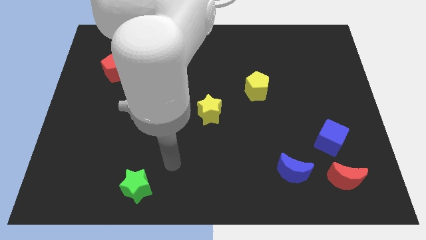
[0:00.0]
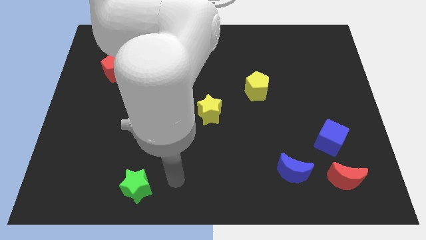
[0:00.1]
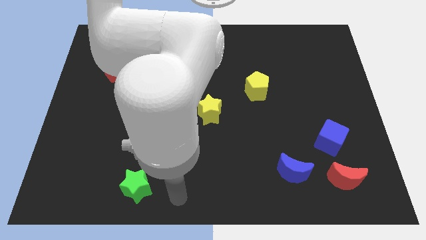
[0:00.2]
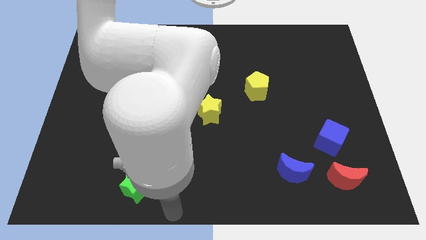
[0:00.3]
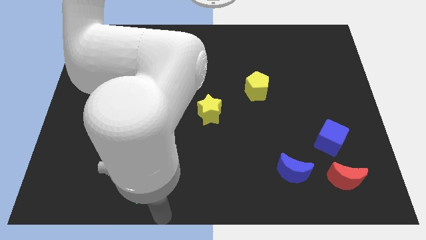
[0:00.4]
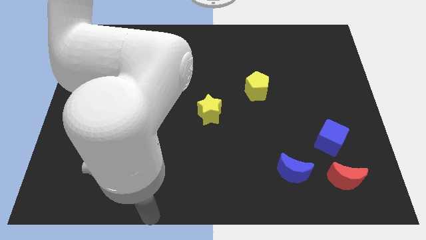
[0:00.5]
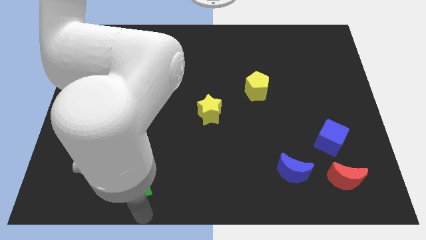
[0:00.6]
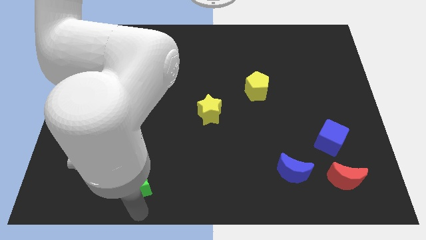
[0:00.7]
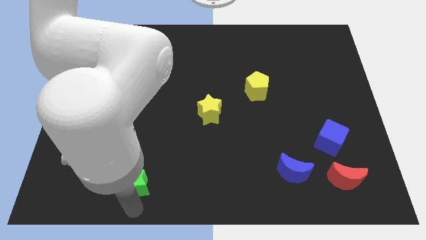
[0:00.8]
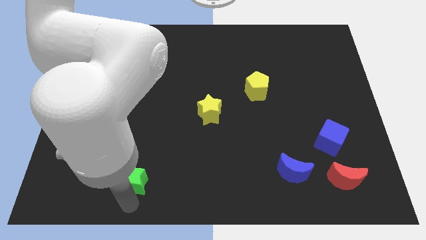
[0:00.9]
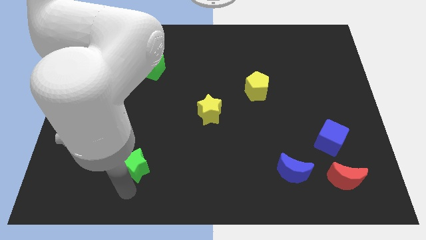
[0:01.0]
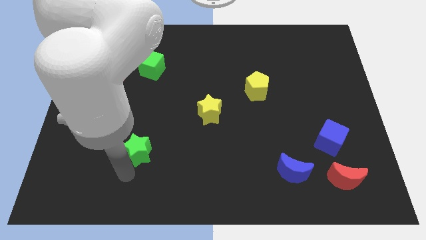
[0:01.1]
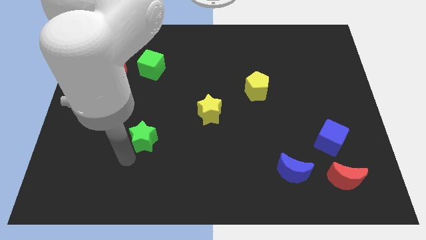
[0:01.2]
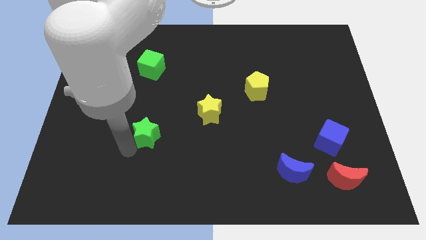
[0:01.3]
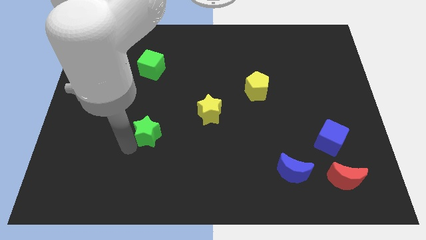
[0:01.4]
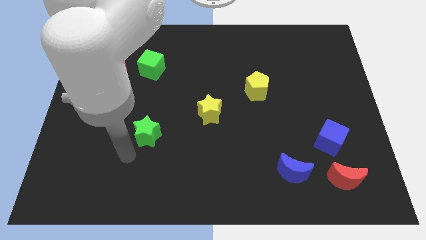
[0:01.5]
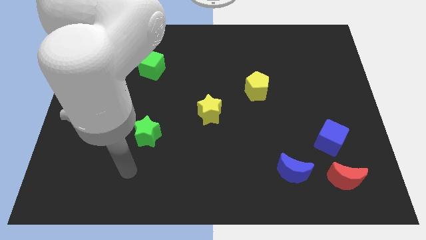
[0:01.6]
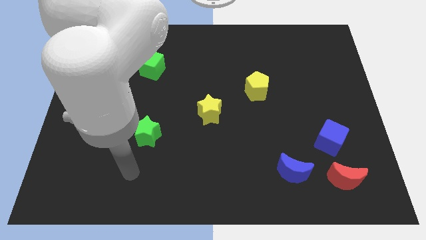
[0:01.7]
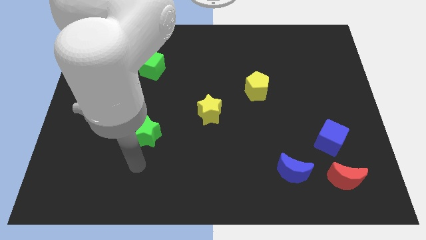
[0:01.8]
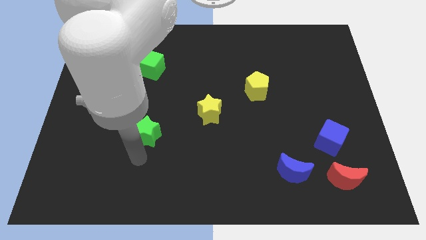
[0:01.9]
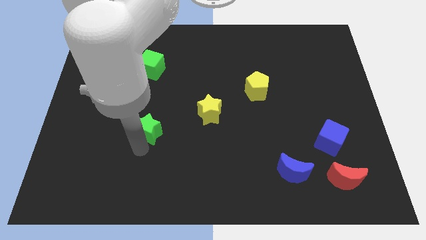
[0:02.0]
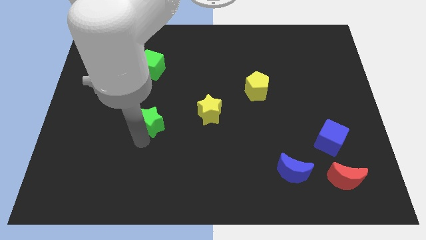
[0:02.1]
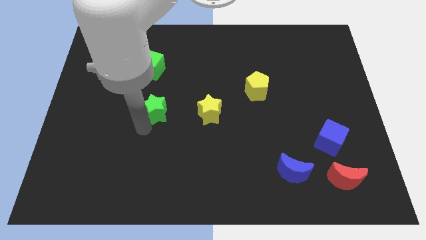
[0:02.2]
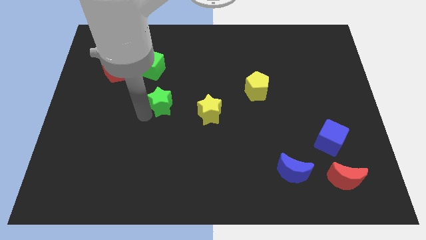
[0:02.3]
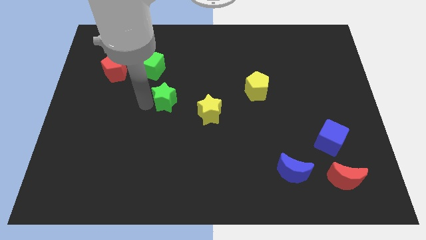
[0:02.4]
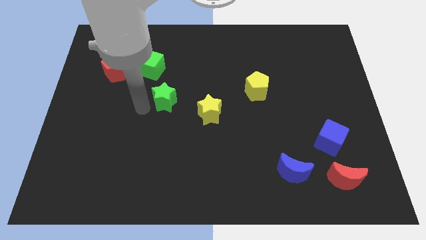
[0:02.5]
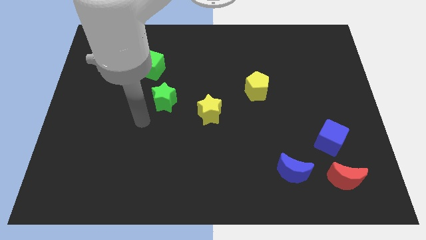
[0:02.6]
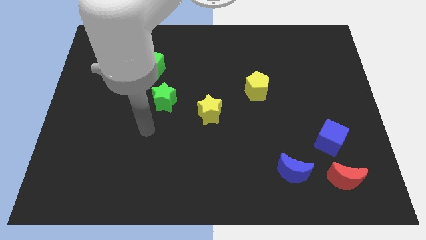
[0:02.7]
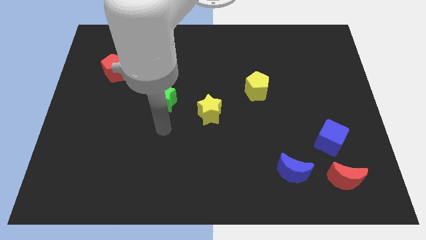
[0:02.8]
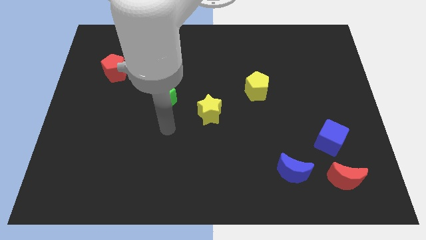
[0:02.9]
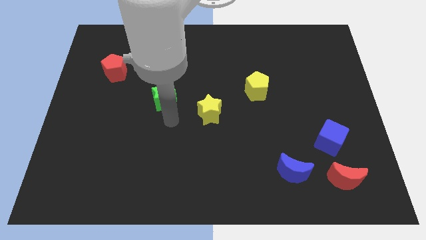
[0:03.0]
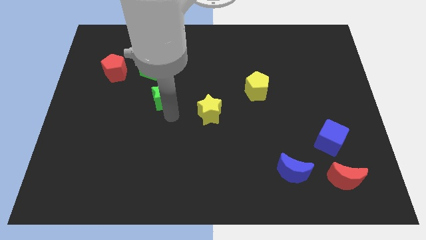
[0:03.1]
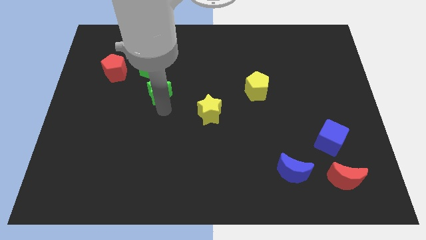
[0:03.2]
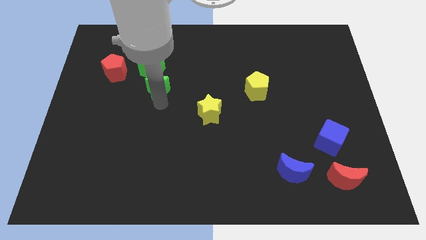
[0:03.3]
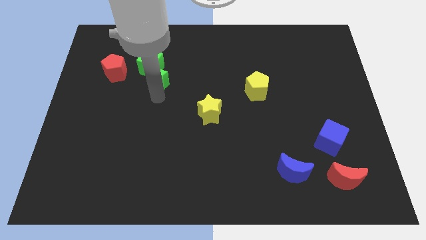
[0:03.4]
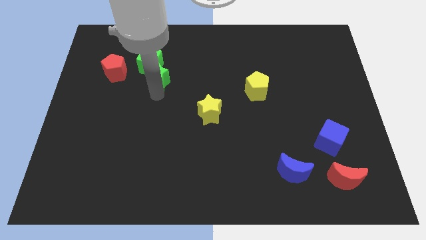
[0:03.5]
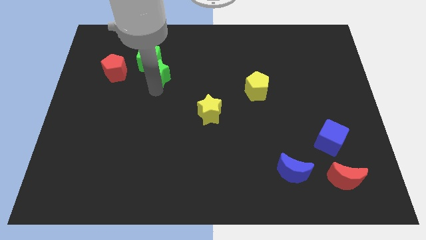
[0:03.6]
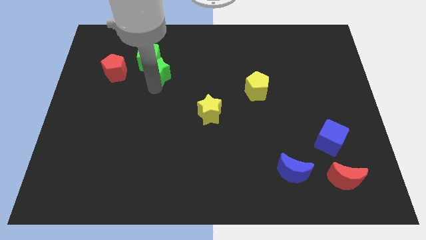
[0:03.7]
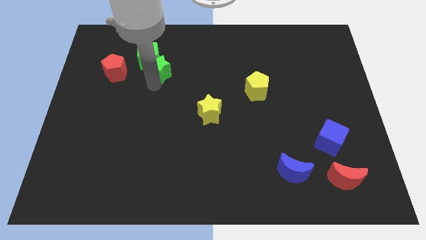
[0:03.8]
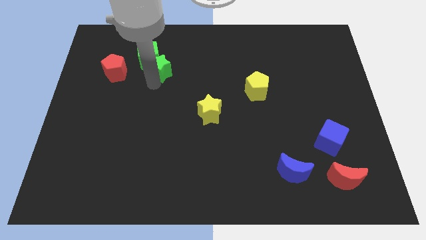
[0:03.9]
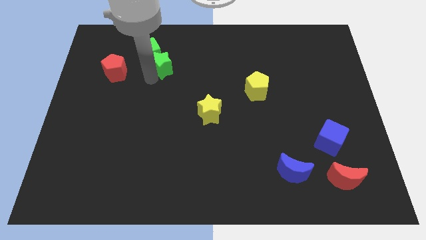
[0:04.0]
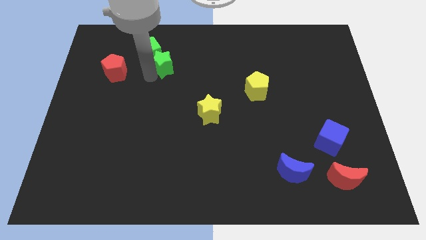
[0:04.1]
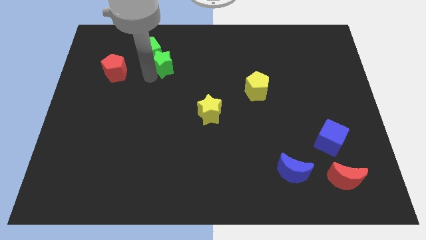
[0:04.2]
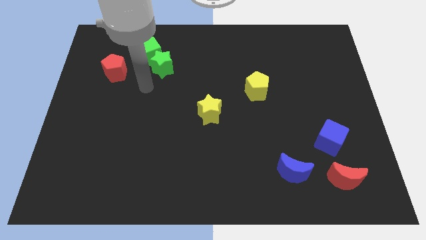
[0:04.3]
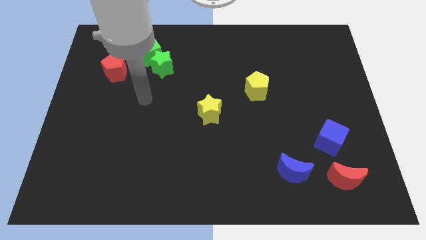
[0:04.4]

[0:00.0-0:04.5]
push the green star into green cube

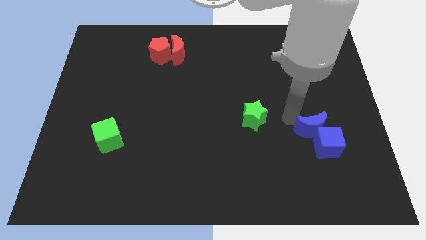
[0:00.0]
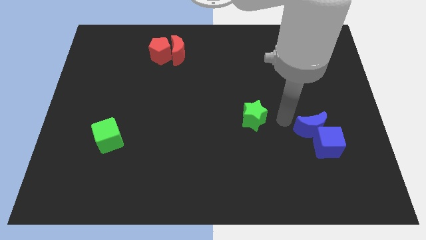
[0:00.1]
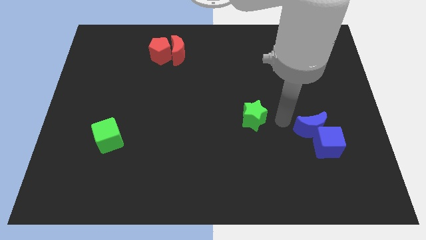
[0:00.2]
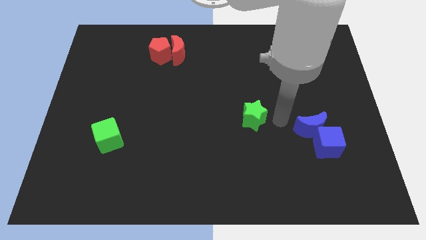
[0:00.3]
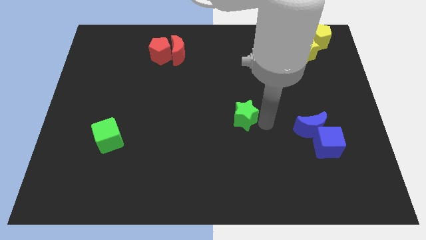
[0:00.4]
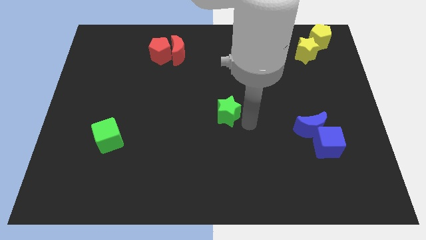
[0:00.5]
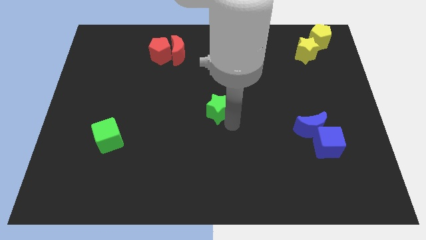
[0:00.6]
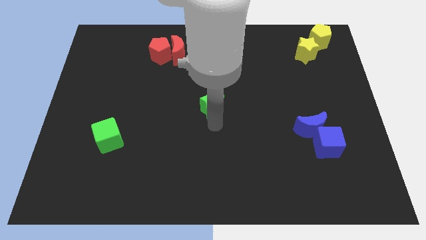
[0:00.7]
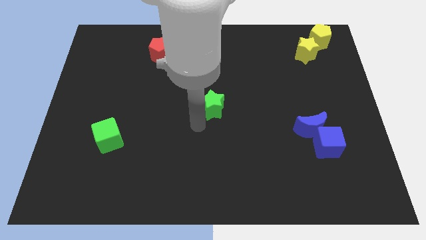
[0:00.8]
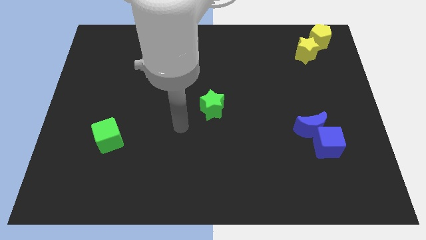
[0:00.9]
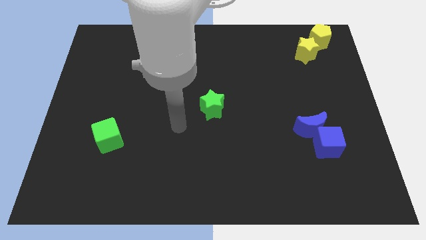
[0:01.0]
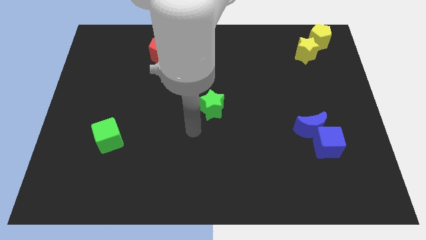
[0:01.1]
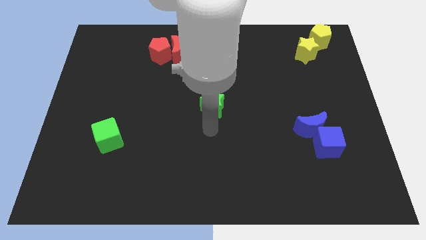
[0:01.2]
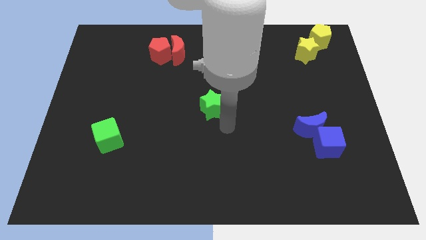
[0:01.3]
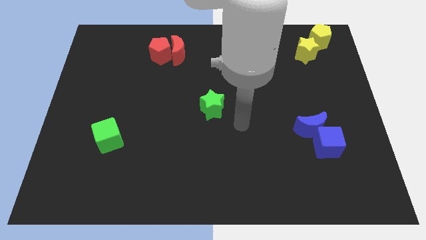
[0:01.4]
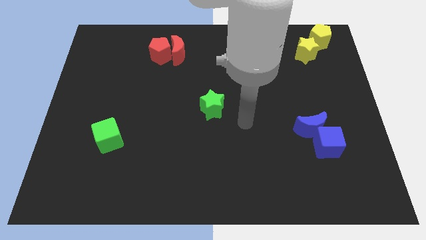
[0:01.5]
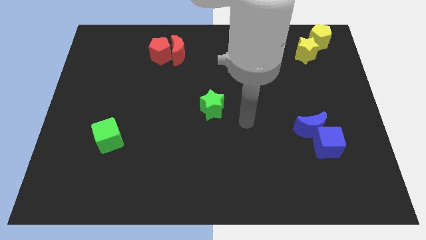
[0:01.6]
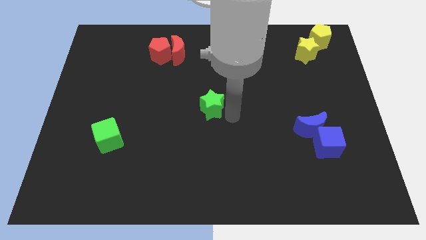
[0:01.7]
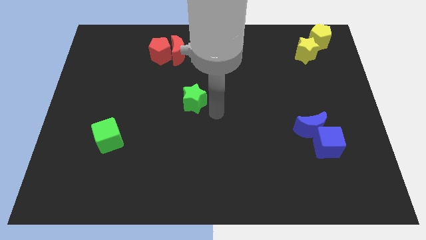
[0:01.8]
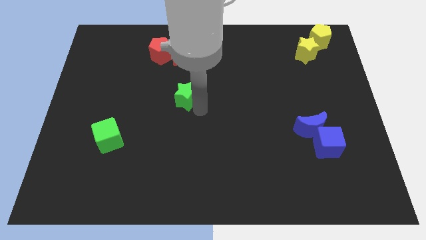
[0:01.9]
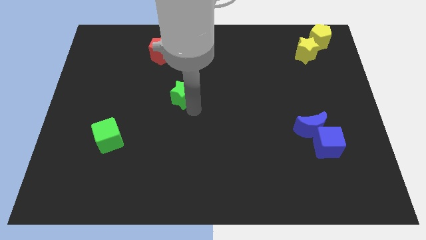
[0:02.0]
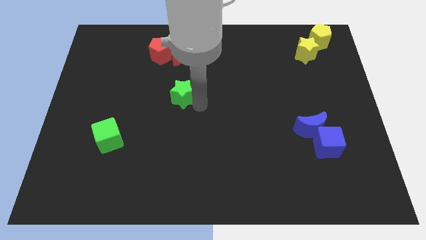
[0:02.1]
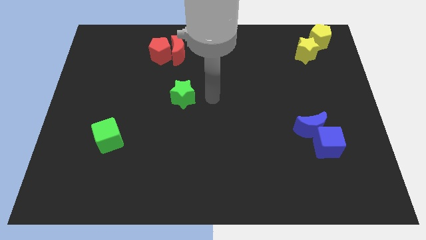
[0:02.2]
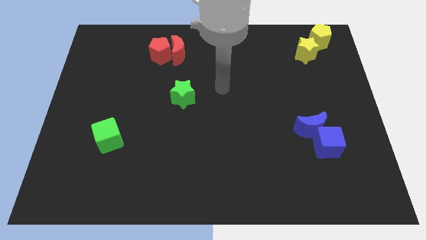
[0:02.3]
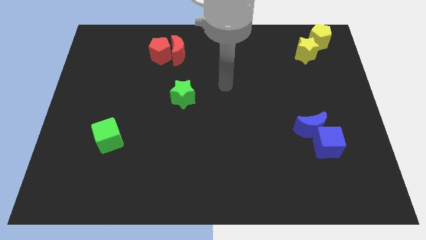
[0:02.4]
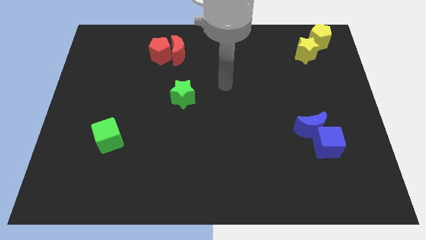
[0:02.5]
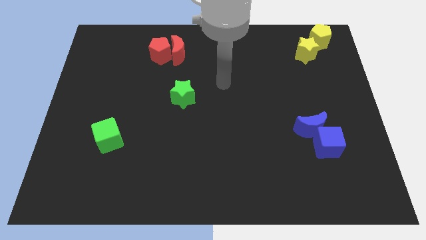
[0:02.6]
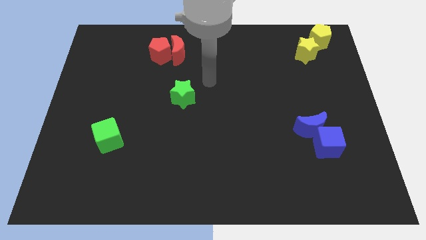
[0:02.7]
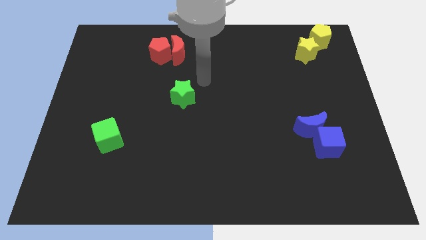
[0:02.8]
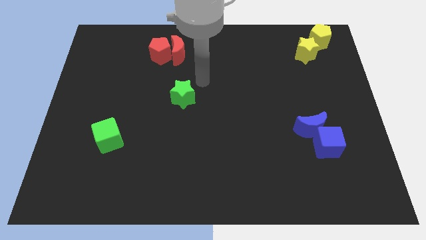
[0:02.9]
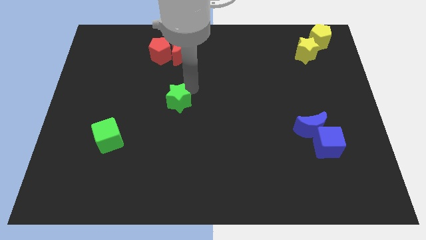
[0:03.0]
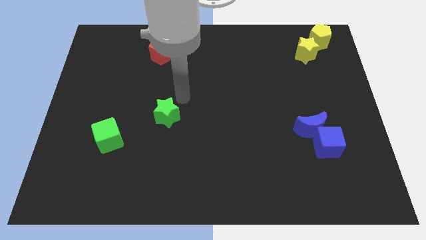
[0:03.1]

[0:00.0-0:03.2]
move the green star to the left of the board

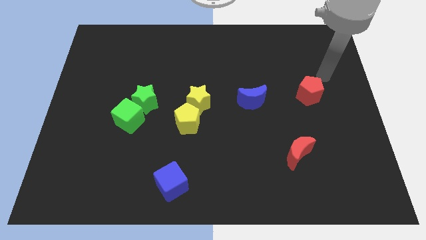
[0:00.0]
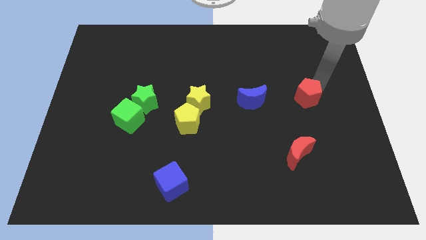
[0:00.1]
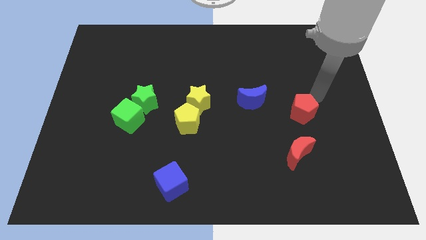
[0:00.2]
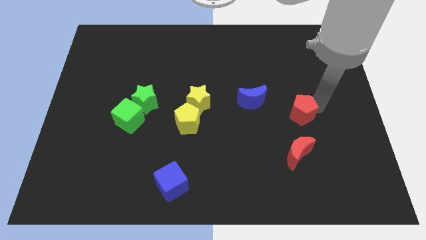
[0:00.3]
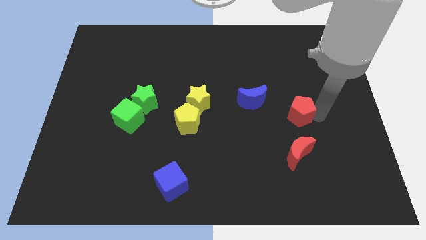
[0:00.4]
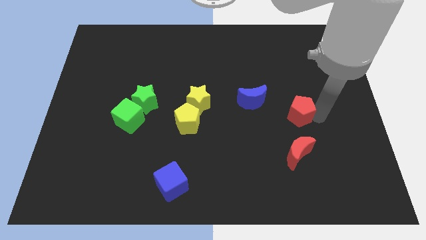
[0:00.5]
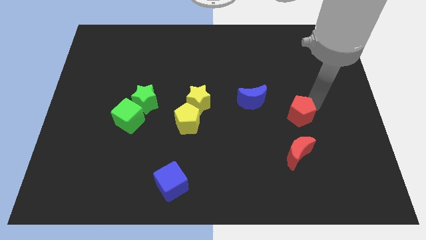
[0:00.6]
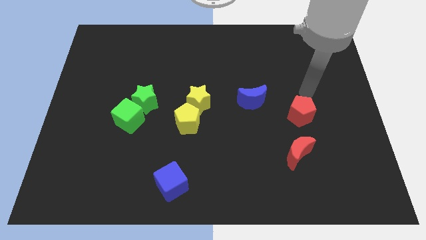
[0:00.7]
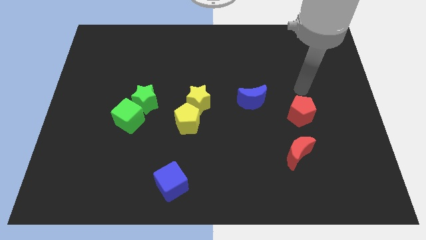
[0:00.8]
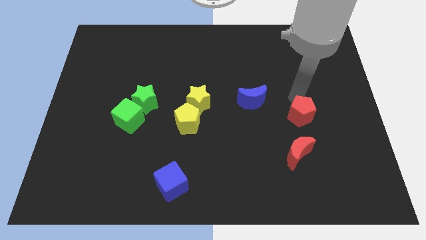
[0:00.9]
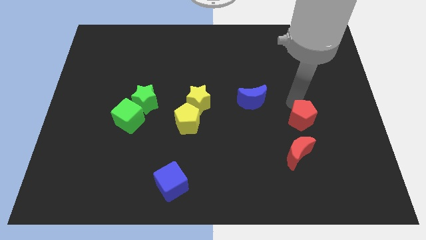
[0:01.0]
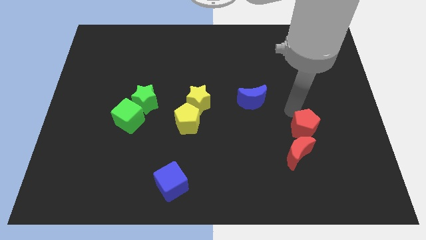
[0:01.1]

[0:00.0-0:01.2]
push the red pentagon slightly down
